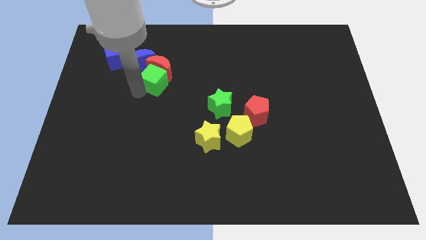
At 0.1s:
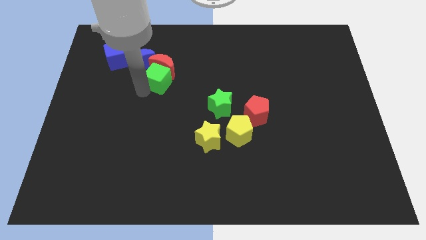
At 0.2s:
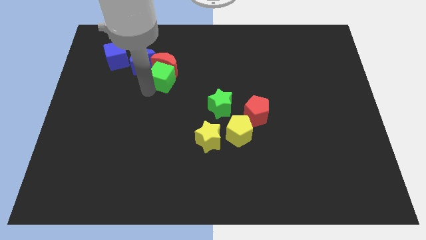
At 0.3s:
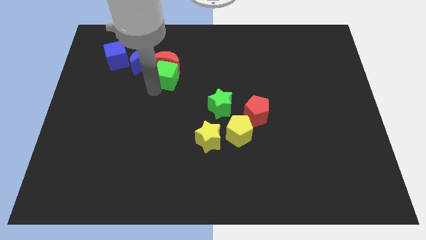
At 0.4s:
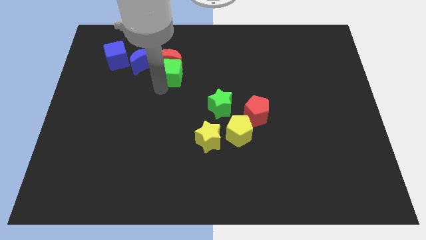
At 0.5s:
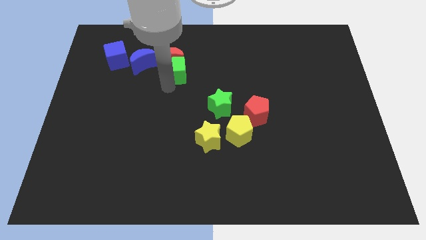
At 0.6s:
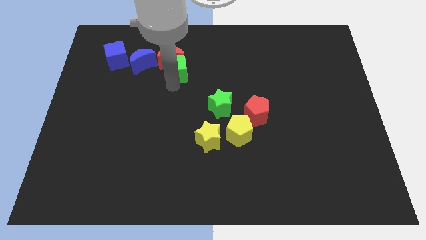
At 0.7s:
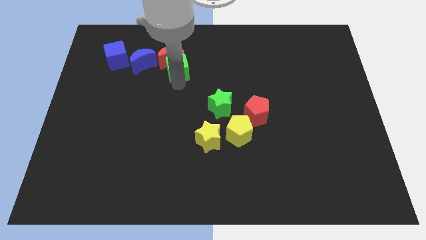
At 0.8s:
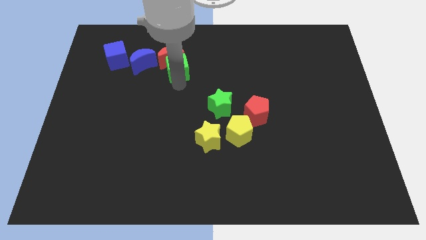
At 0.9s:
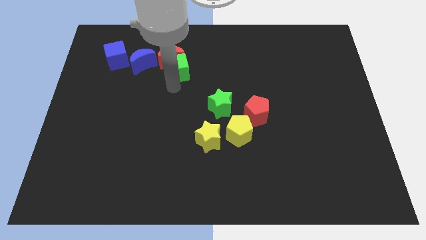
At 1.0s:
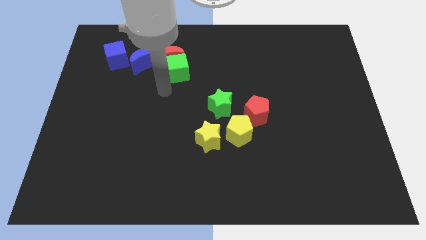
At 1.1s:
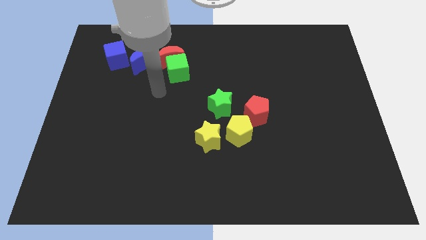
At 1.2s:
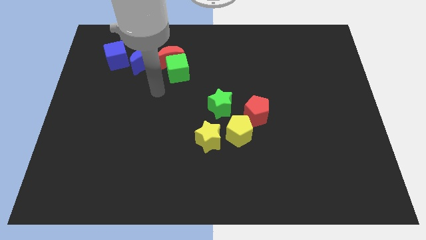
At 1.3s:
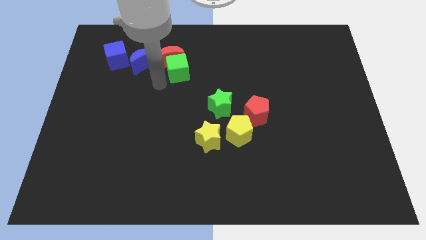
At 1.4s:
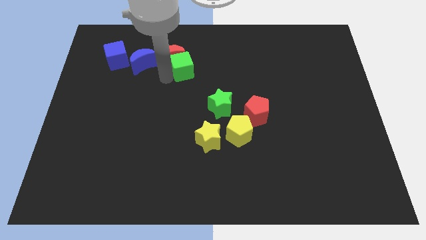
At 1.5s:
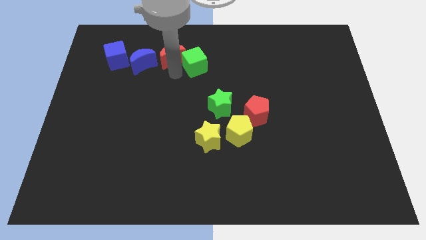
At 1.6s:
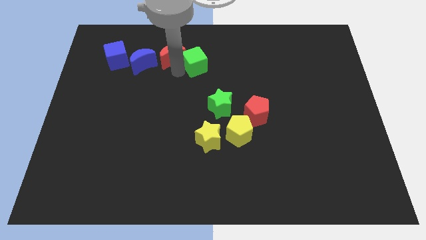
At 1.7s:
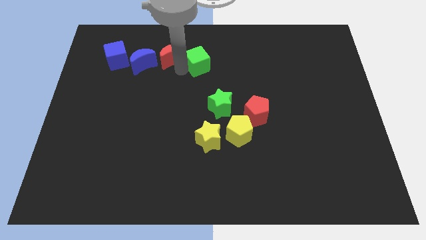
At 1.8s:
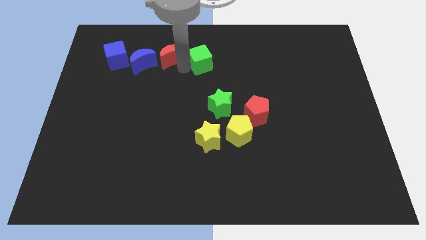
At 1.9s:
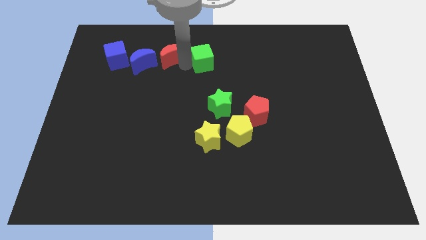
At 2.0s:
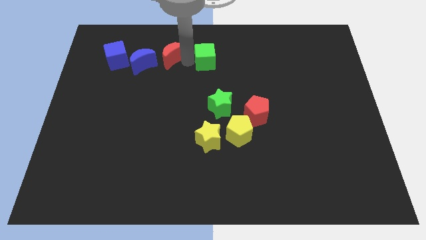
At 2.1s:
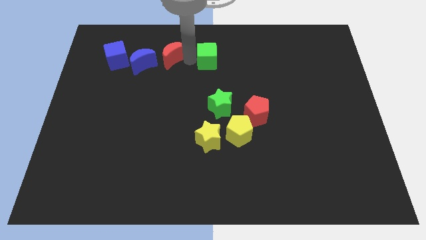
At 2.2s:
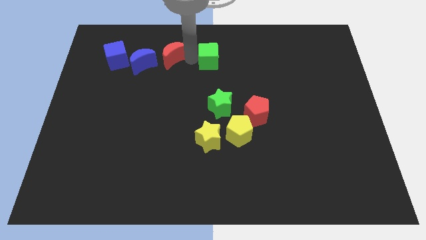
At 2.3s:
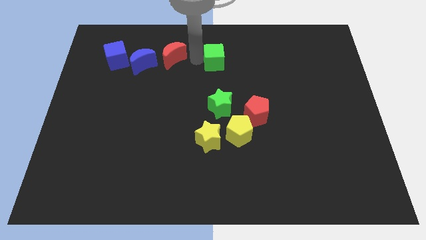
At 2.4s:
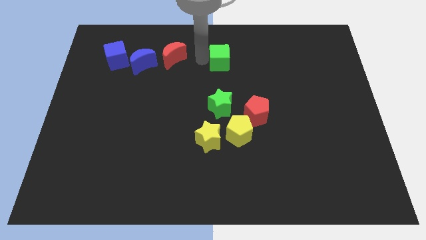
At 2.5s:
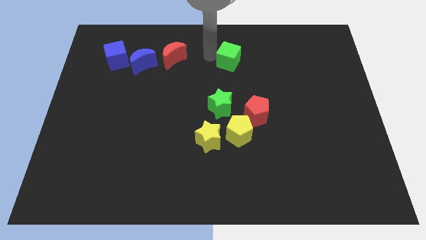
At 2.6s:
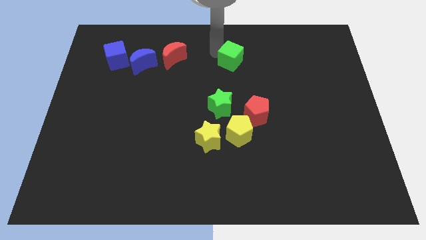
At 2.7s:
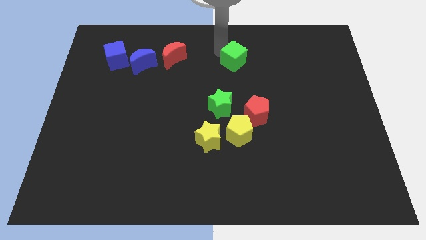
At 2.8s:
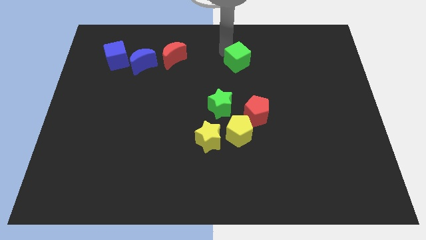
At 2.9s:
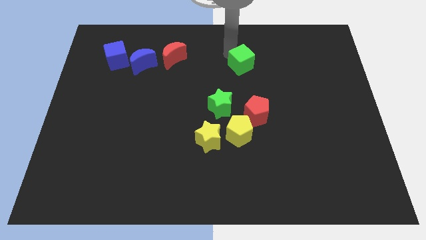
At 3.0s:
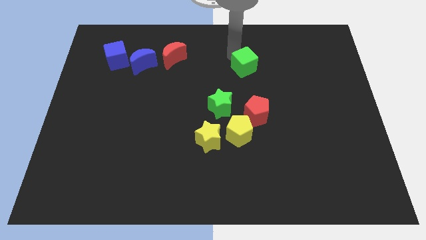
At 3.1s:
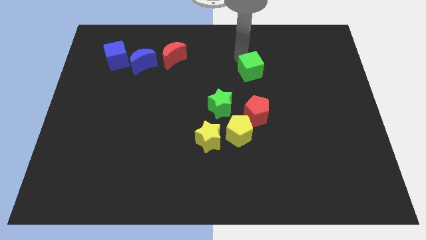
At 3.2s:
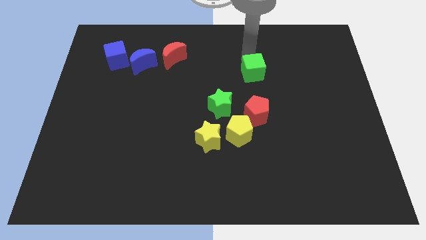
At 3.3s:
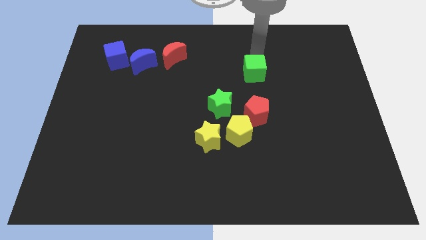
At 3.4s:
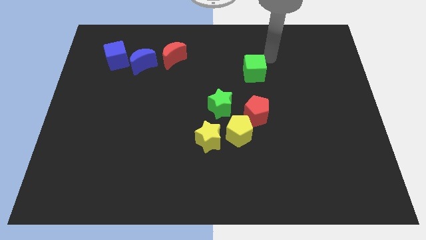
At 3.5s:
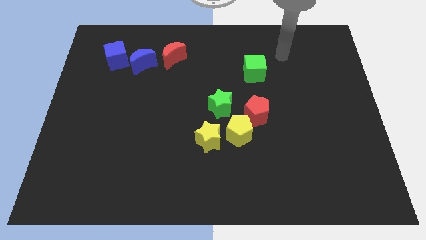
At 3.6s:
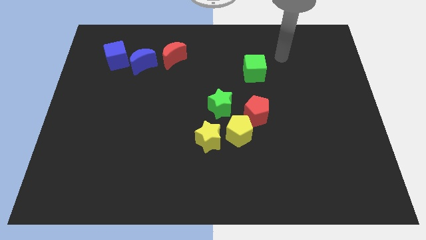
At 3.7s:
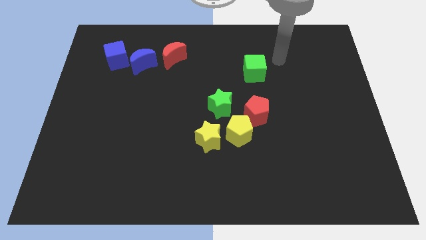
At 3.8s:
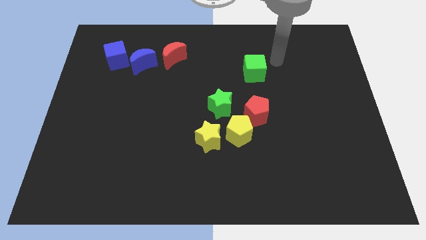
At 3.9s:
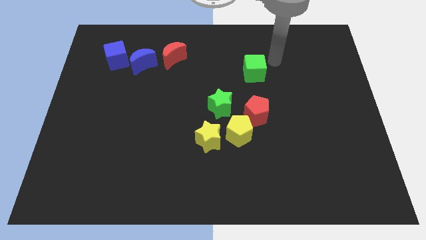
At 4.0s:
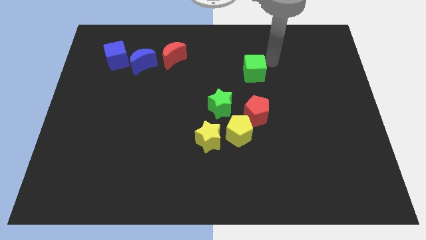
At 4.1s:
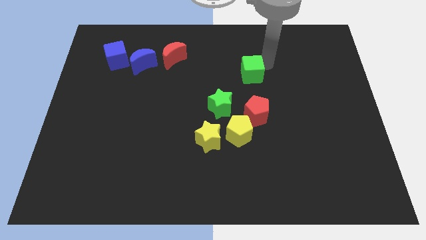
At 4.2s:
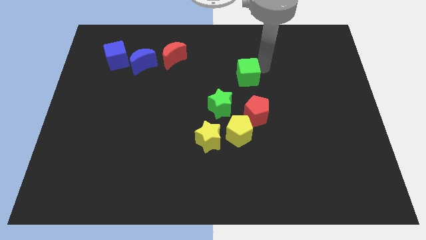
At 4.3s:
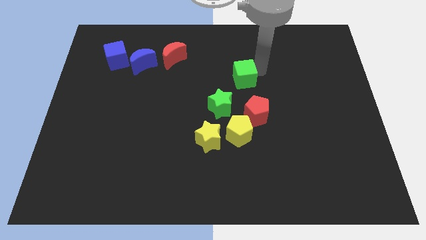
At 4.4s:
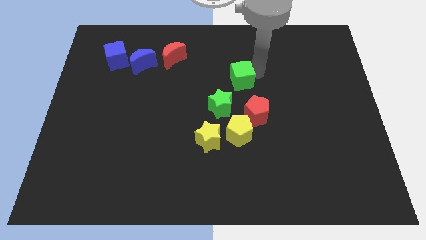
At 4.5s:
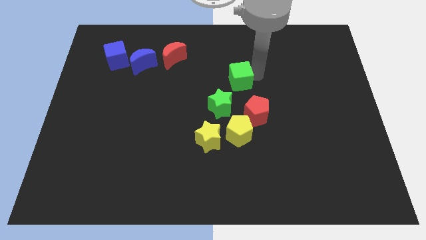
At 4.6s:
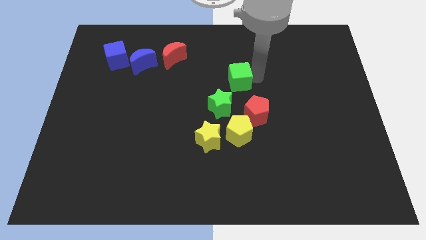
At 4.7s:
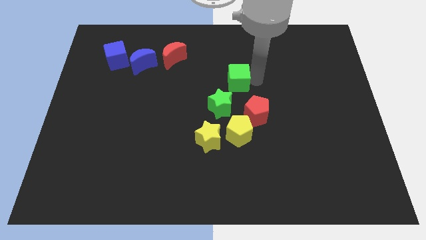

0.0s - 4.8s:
push the green cube close to the green star

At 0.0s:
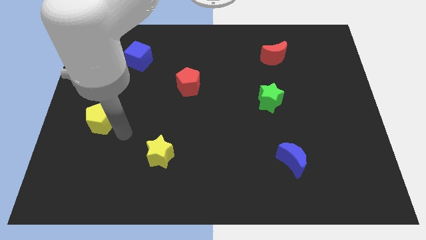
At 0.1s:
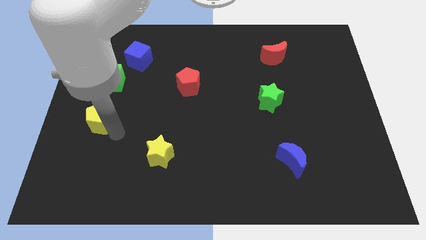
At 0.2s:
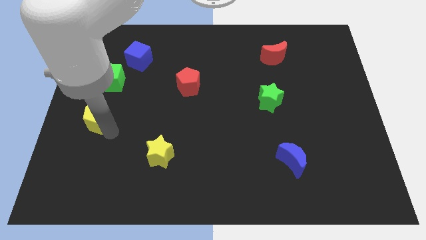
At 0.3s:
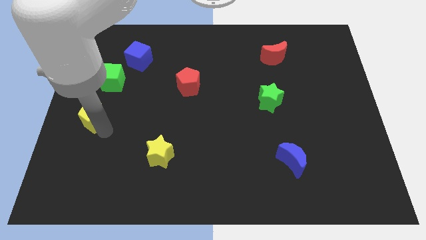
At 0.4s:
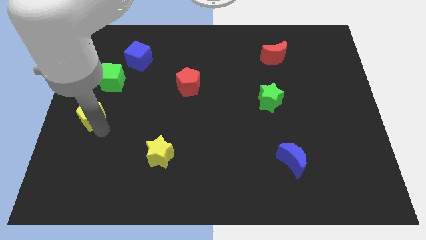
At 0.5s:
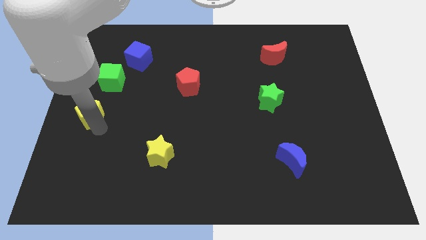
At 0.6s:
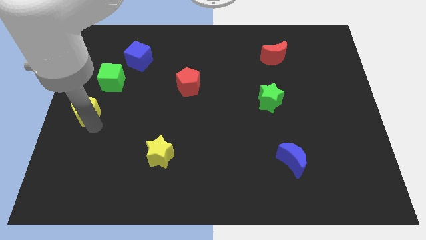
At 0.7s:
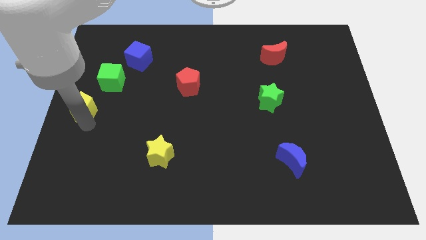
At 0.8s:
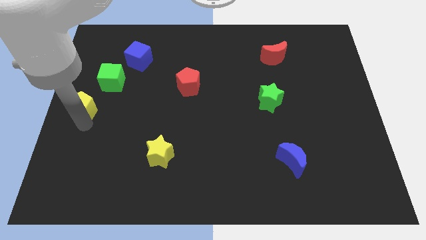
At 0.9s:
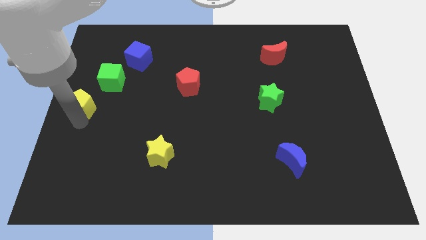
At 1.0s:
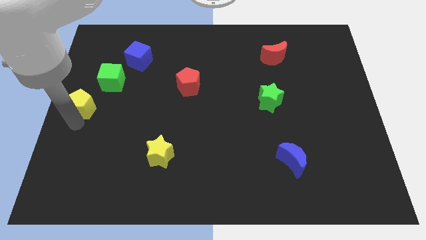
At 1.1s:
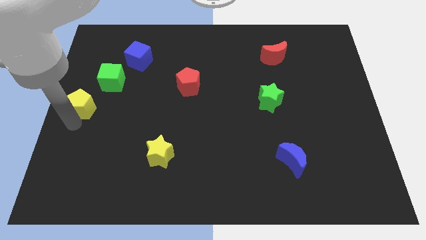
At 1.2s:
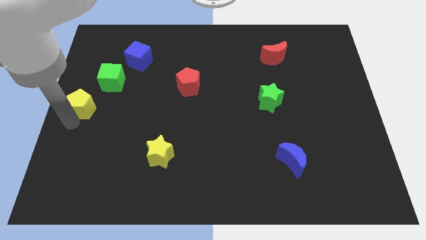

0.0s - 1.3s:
push the yellow pentagon towards the center left side of the board

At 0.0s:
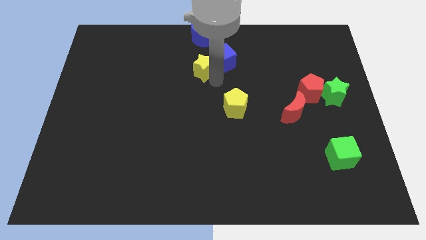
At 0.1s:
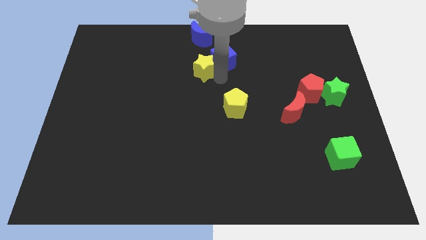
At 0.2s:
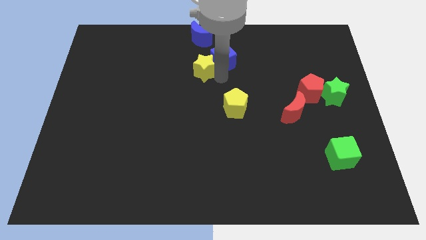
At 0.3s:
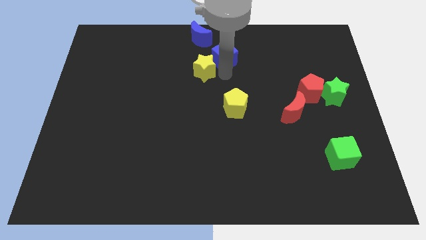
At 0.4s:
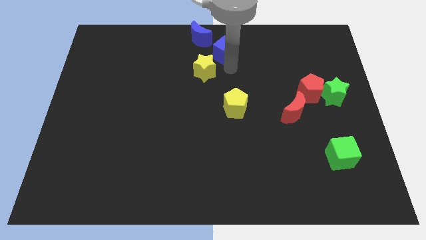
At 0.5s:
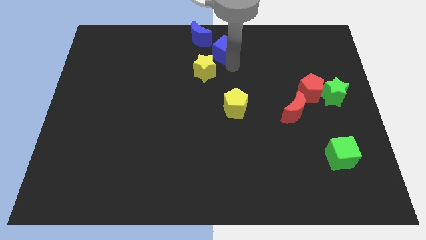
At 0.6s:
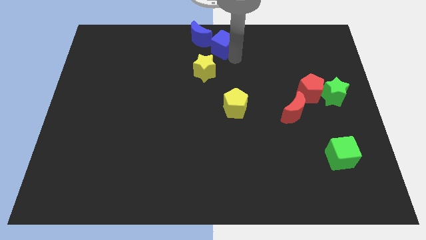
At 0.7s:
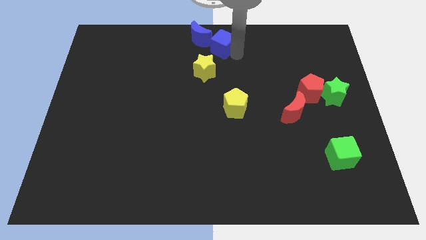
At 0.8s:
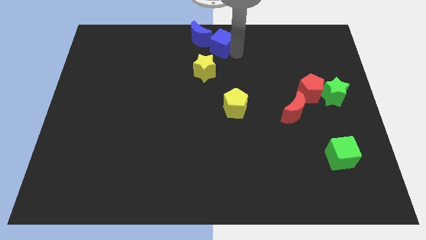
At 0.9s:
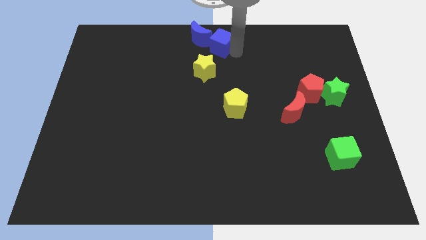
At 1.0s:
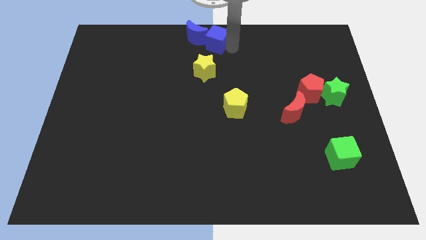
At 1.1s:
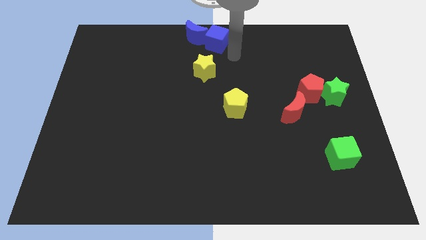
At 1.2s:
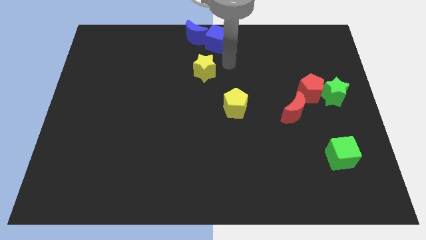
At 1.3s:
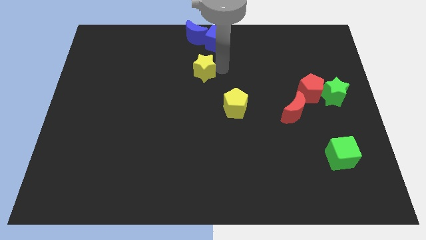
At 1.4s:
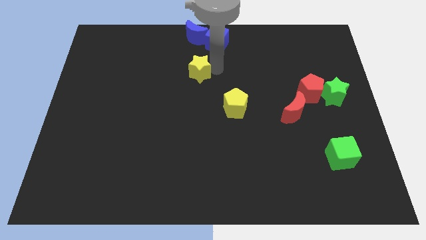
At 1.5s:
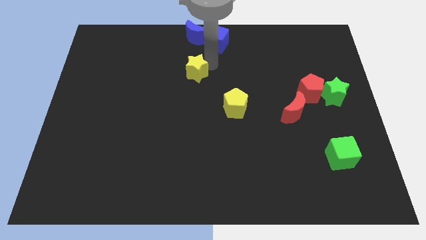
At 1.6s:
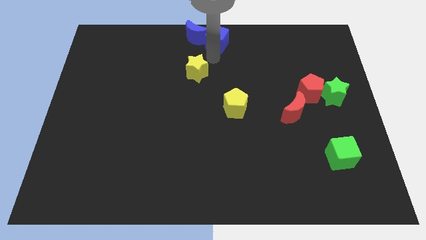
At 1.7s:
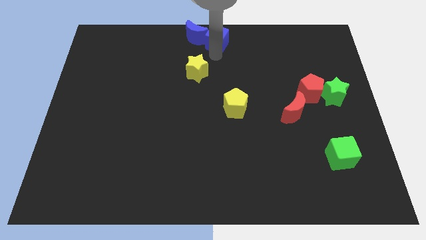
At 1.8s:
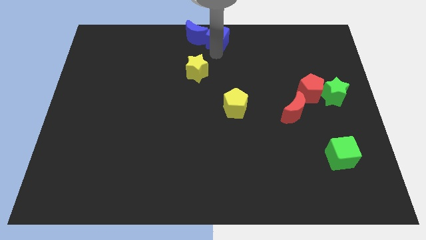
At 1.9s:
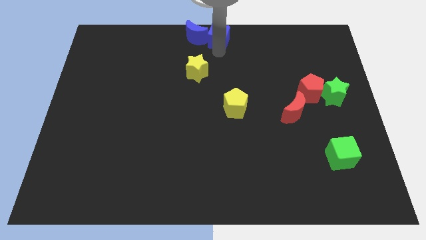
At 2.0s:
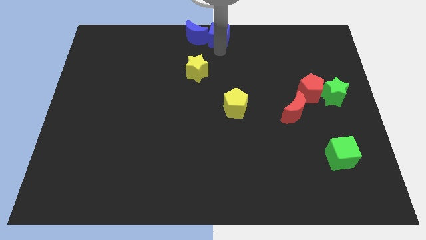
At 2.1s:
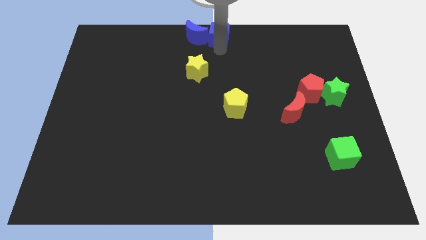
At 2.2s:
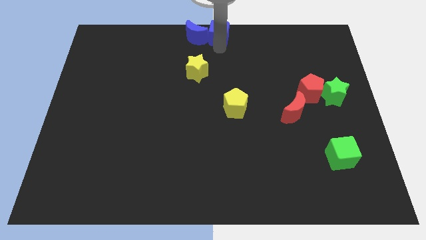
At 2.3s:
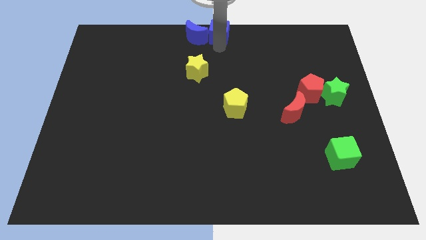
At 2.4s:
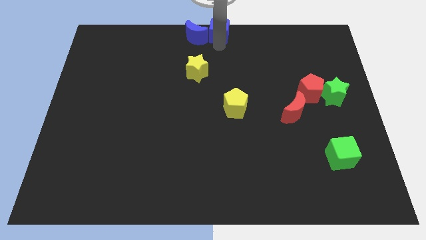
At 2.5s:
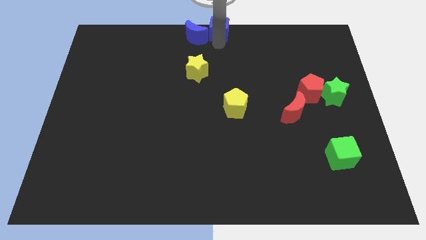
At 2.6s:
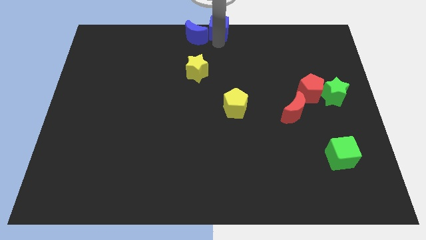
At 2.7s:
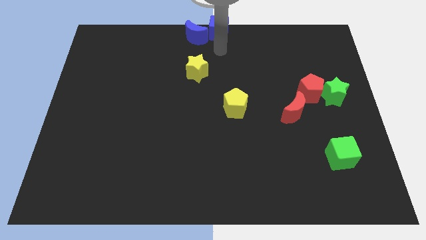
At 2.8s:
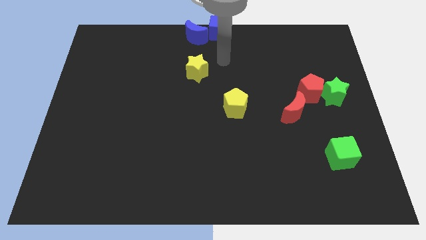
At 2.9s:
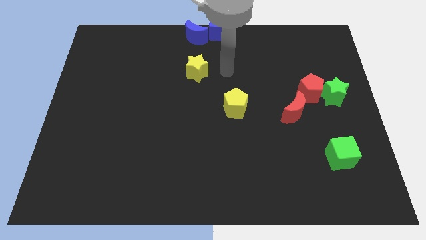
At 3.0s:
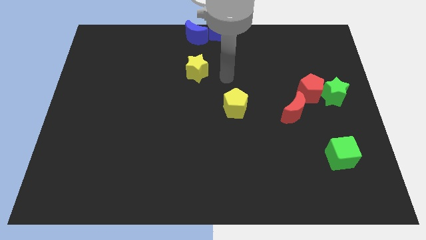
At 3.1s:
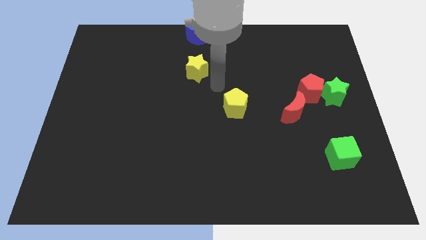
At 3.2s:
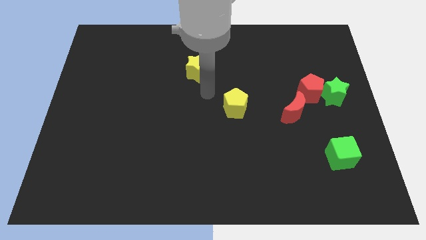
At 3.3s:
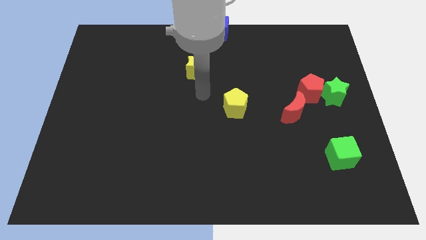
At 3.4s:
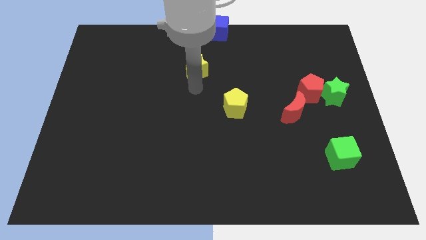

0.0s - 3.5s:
move the blue cube to the right of the blue crescent
